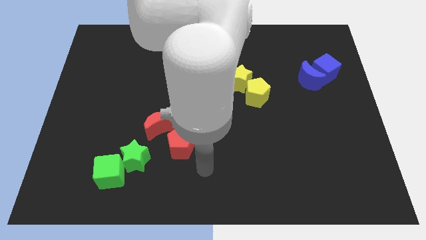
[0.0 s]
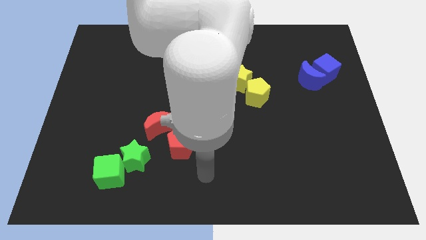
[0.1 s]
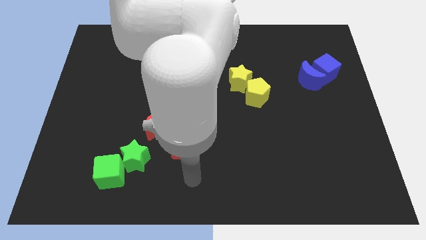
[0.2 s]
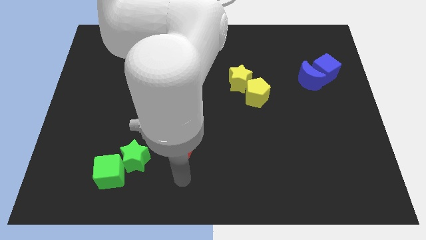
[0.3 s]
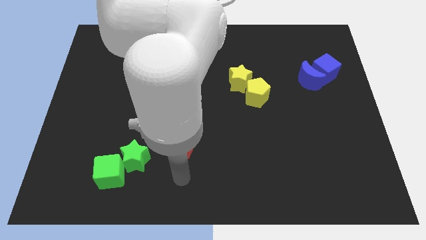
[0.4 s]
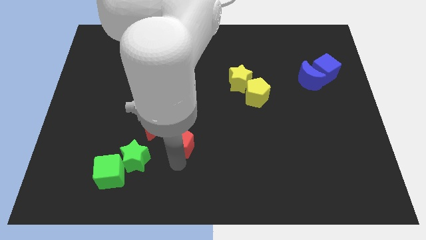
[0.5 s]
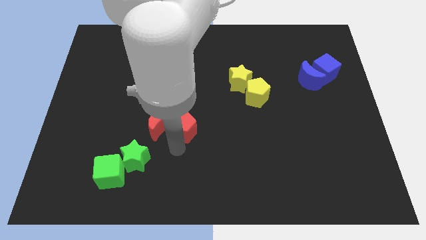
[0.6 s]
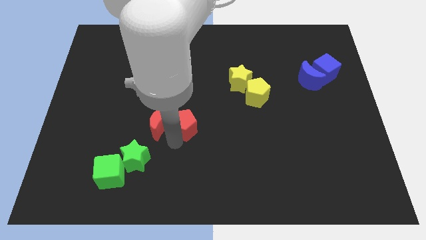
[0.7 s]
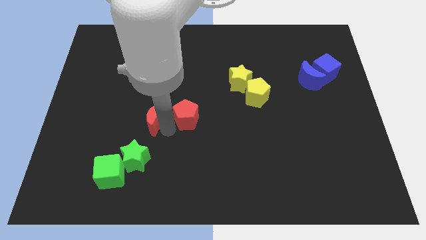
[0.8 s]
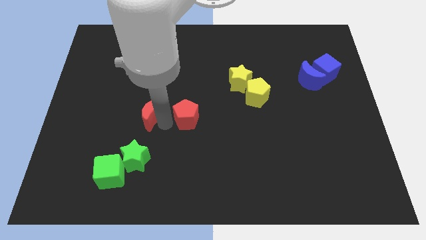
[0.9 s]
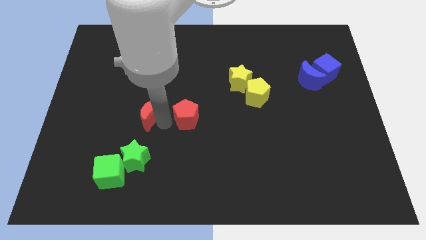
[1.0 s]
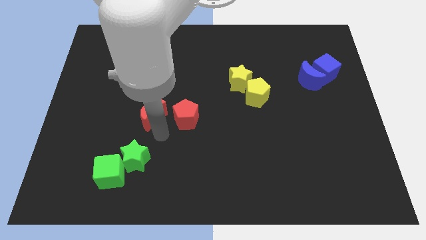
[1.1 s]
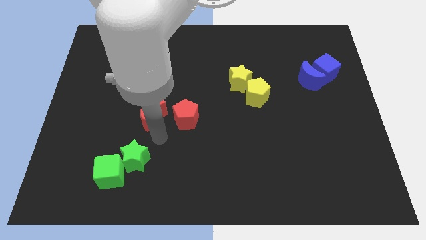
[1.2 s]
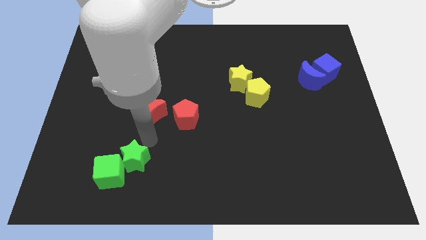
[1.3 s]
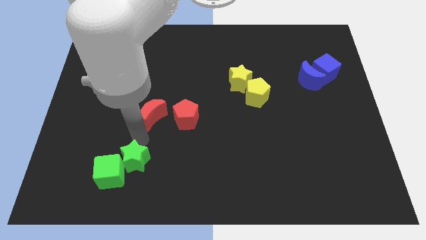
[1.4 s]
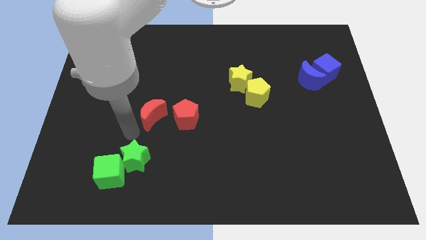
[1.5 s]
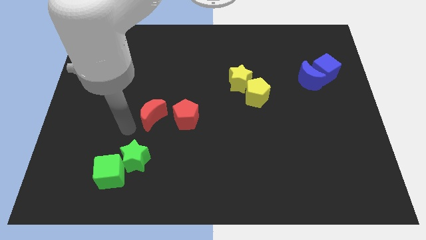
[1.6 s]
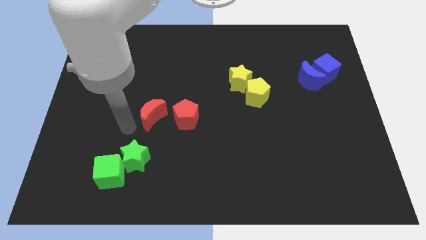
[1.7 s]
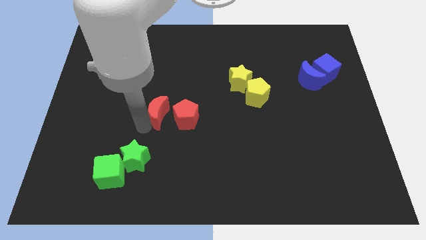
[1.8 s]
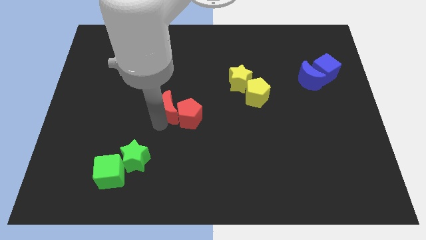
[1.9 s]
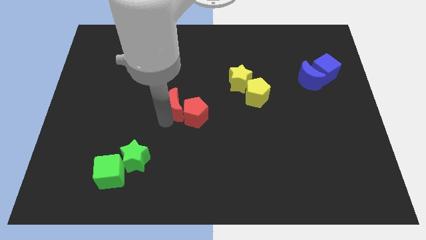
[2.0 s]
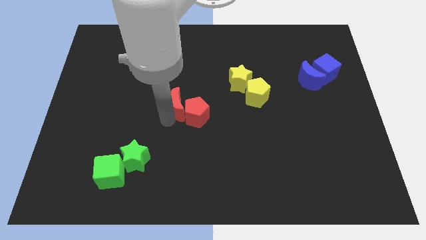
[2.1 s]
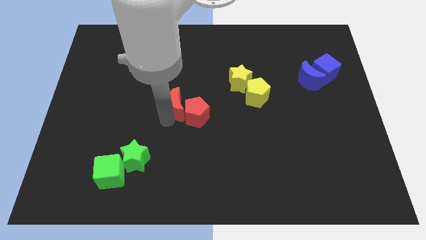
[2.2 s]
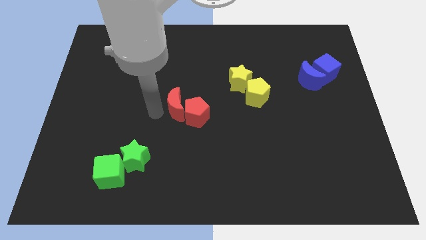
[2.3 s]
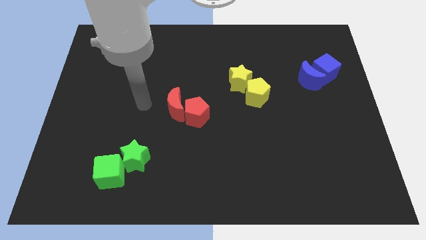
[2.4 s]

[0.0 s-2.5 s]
move the red blocks towards the group of yellow blocks

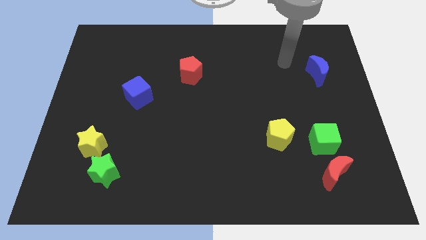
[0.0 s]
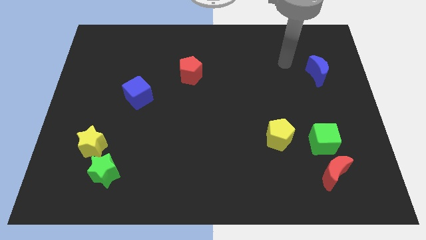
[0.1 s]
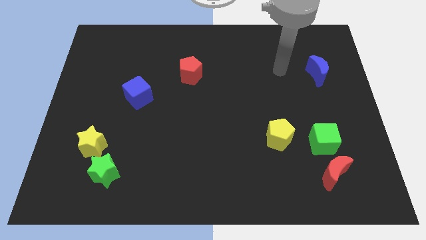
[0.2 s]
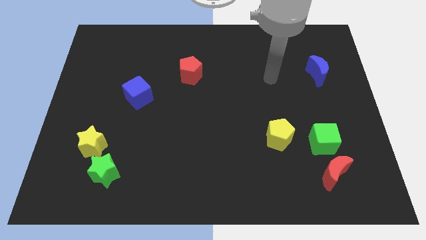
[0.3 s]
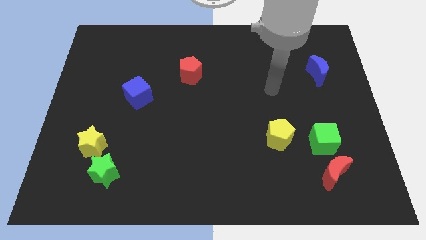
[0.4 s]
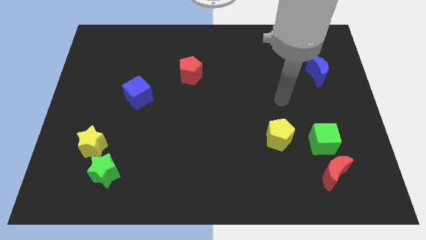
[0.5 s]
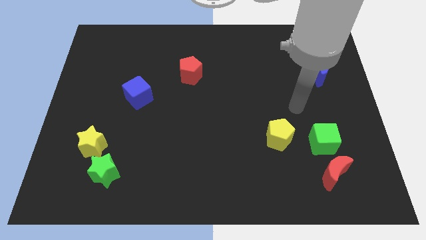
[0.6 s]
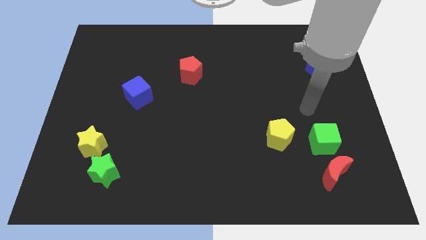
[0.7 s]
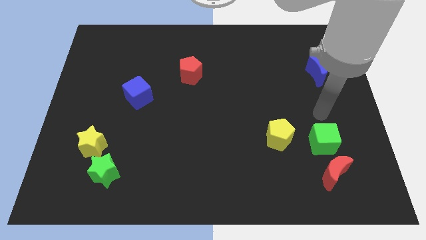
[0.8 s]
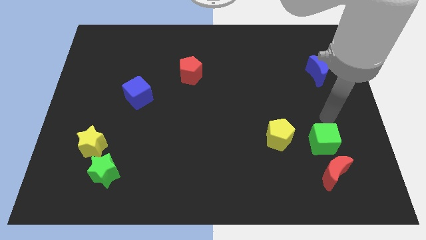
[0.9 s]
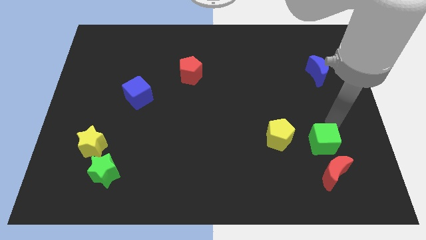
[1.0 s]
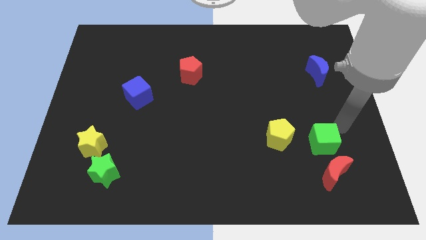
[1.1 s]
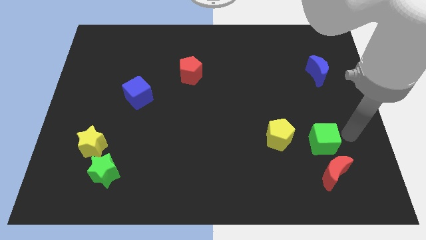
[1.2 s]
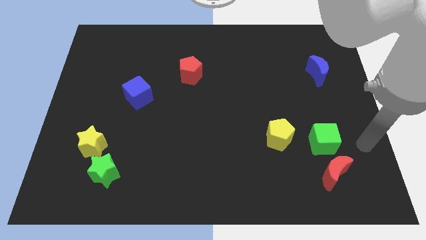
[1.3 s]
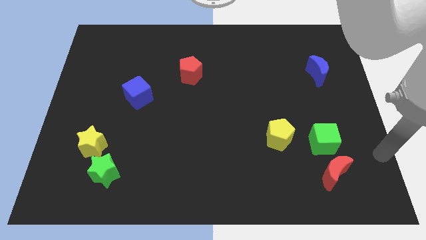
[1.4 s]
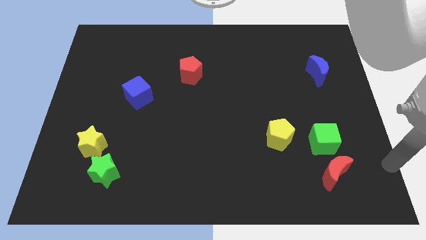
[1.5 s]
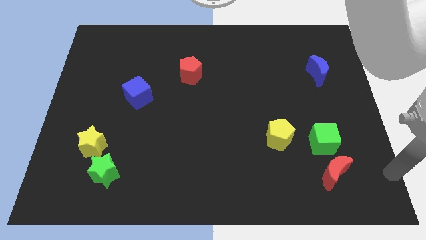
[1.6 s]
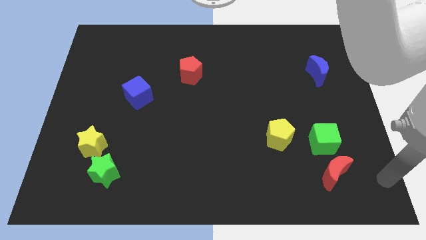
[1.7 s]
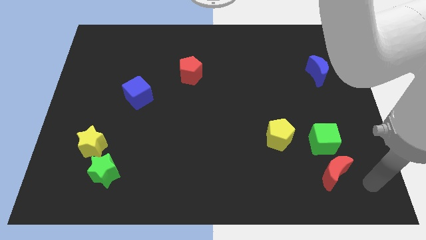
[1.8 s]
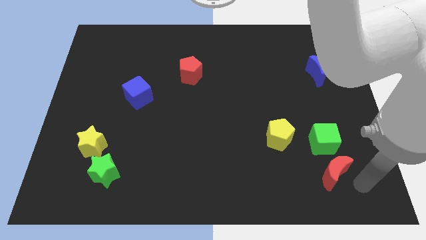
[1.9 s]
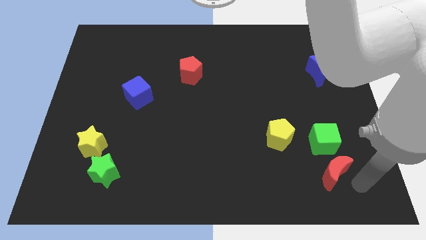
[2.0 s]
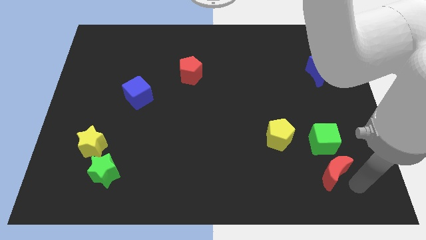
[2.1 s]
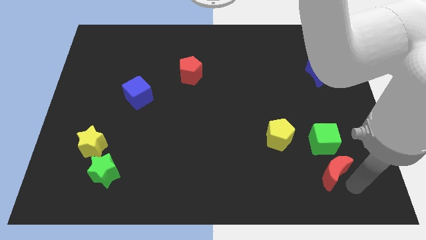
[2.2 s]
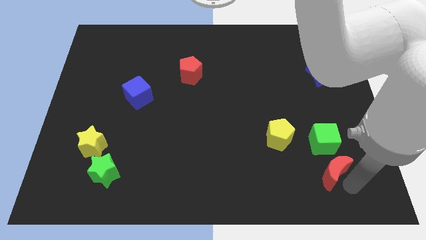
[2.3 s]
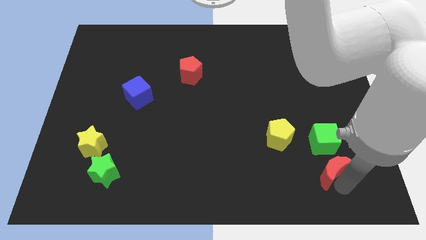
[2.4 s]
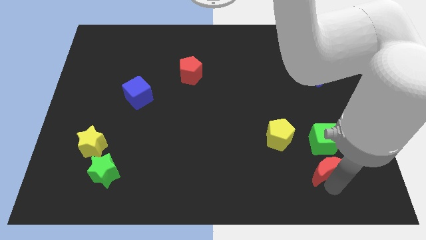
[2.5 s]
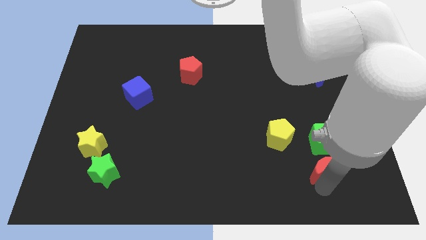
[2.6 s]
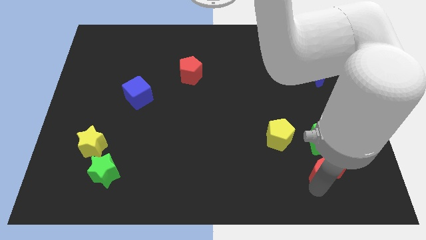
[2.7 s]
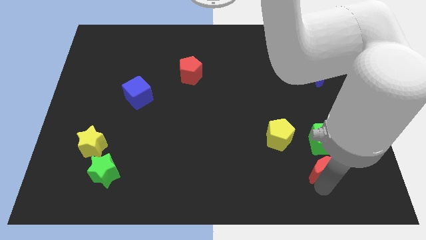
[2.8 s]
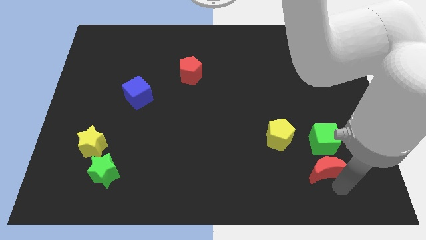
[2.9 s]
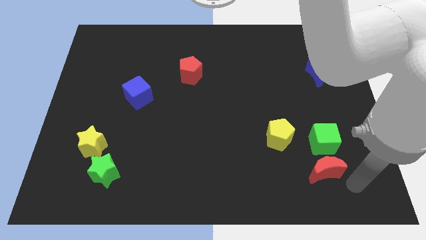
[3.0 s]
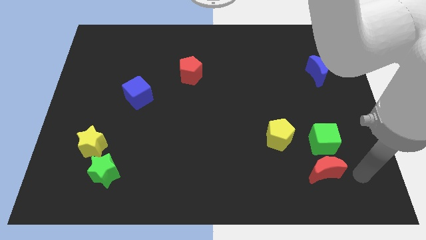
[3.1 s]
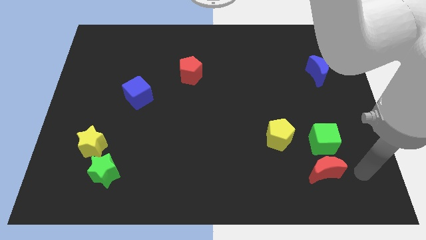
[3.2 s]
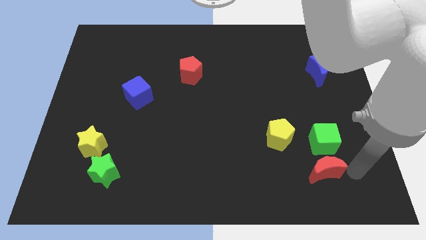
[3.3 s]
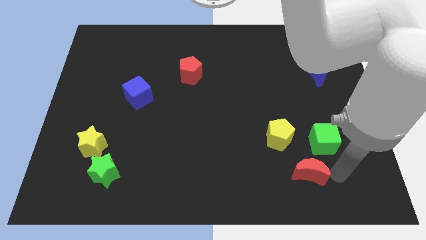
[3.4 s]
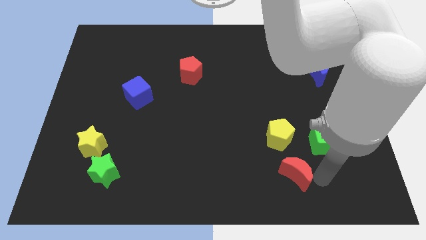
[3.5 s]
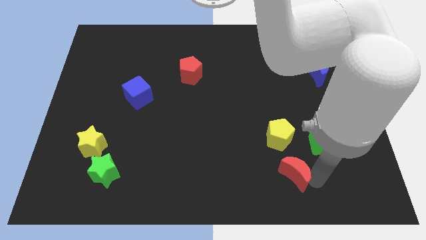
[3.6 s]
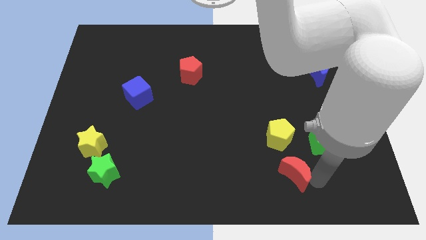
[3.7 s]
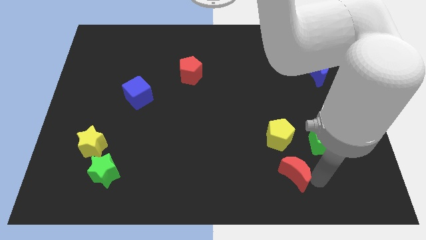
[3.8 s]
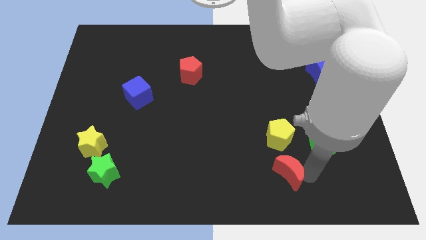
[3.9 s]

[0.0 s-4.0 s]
move the red moon slightly to the left

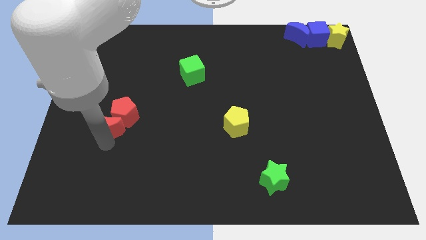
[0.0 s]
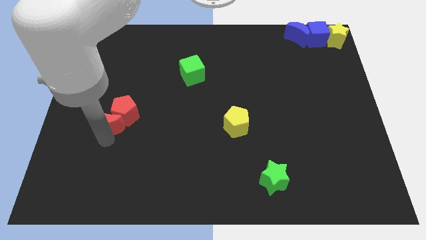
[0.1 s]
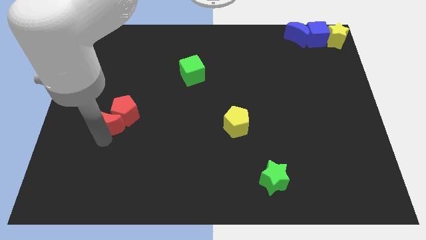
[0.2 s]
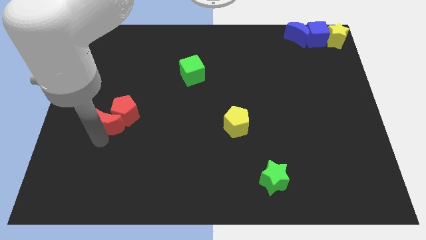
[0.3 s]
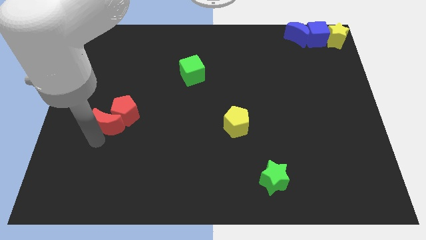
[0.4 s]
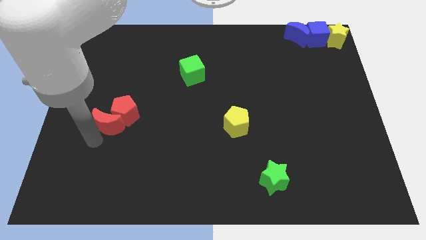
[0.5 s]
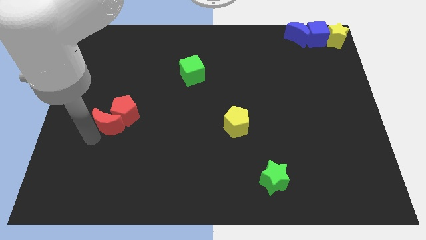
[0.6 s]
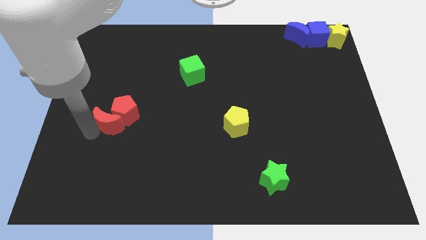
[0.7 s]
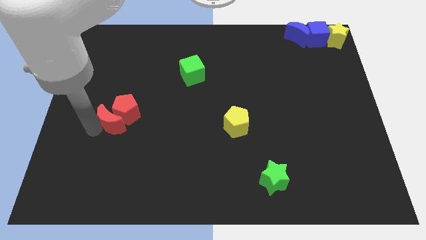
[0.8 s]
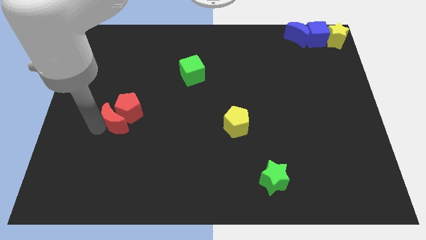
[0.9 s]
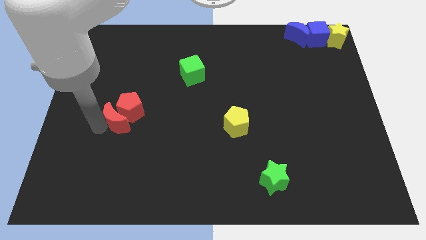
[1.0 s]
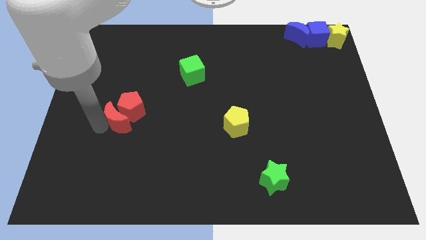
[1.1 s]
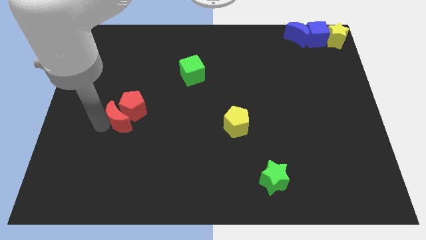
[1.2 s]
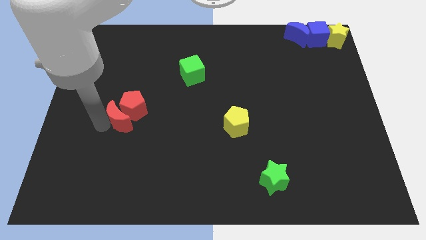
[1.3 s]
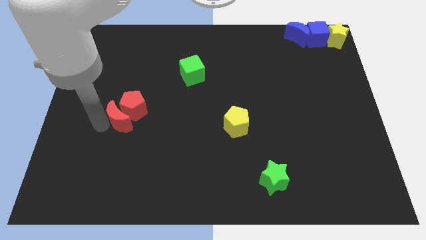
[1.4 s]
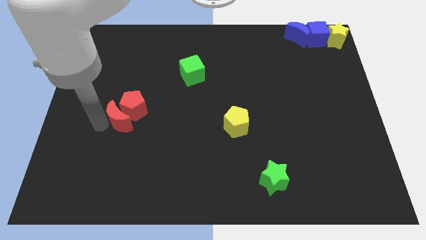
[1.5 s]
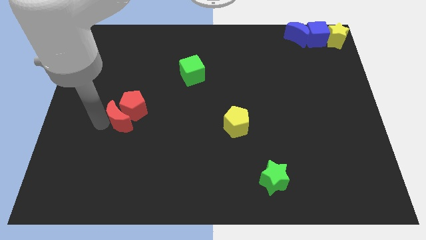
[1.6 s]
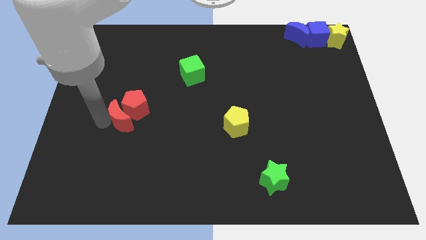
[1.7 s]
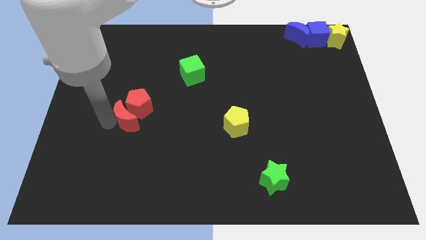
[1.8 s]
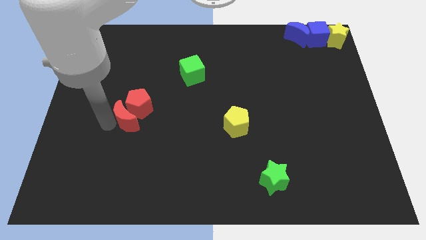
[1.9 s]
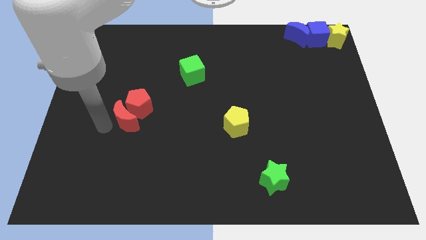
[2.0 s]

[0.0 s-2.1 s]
push red blocks towards center right

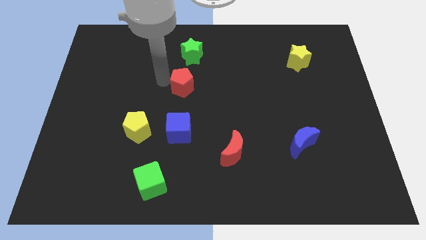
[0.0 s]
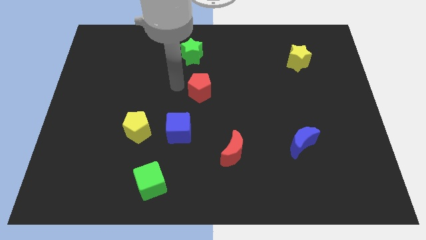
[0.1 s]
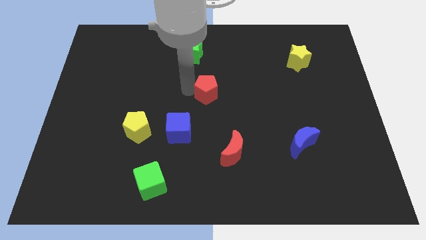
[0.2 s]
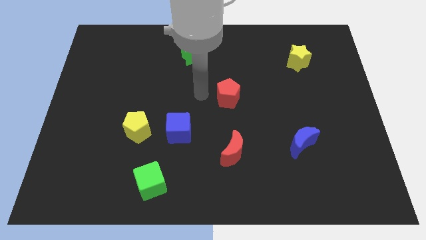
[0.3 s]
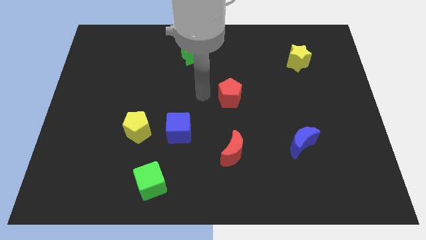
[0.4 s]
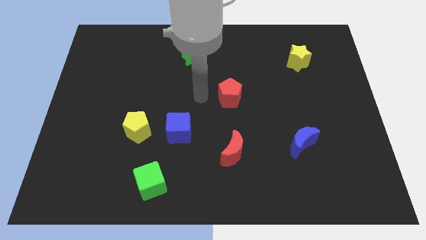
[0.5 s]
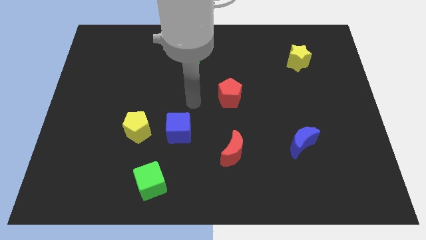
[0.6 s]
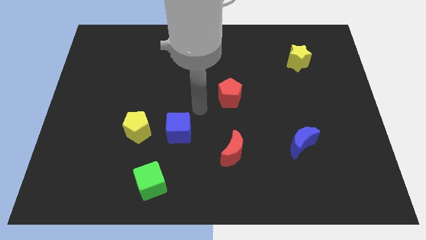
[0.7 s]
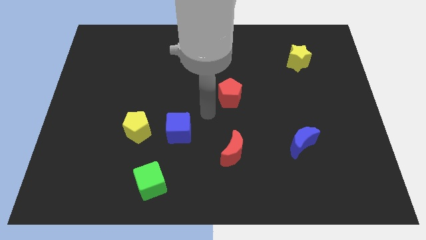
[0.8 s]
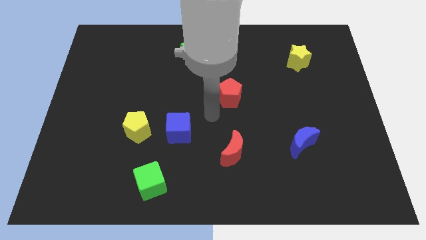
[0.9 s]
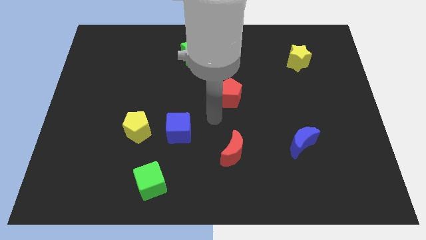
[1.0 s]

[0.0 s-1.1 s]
push the red pentagon above the red crescent
